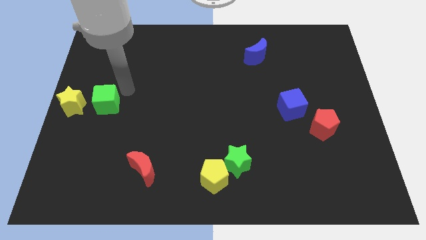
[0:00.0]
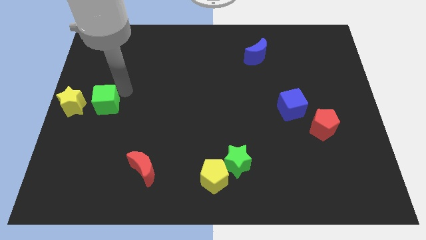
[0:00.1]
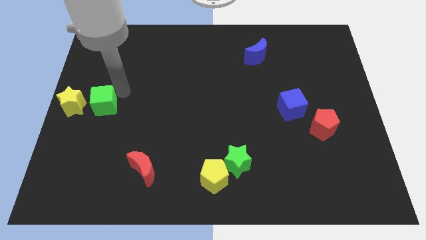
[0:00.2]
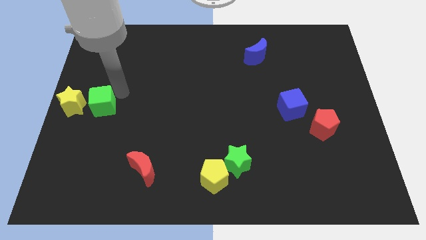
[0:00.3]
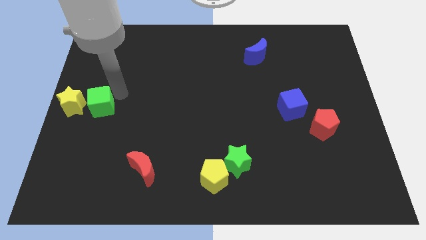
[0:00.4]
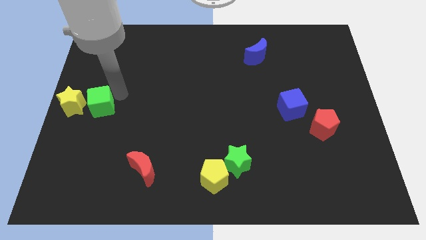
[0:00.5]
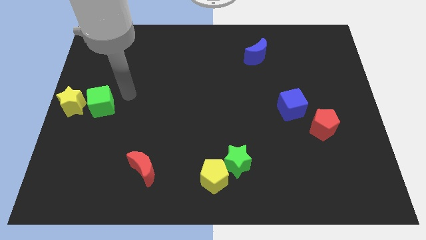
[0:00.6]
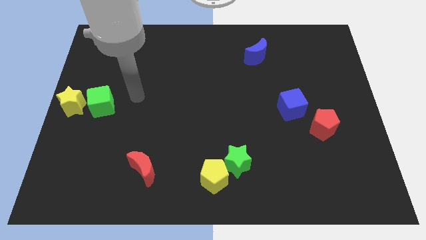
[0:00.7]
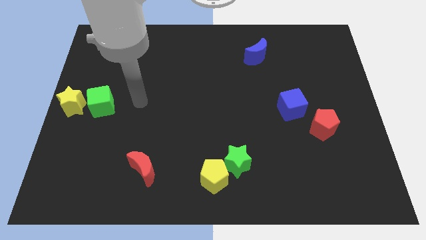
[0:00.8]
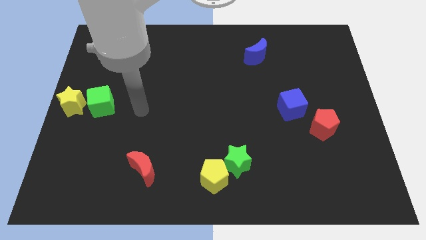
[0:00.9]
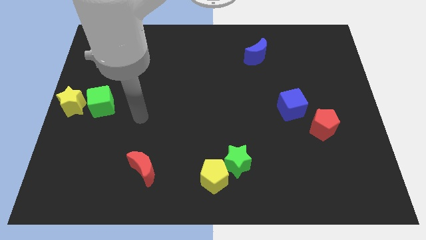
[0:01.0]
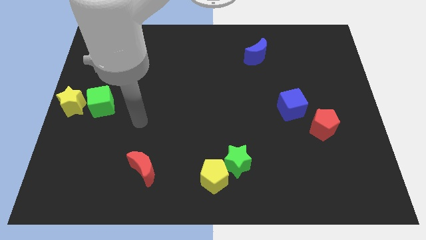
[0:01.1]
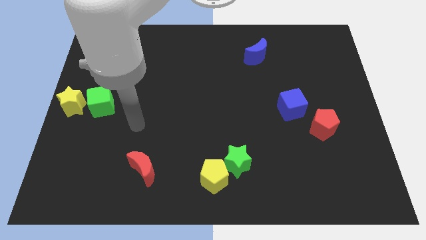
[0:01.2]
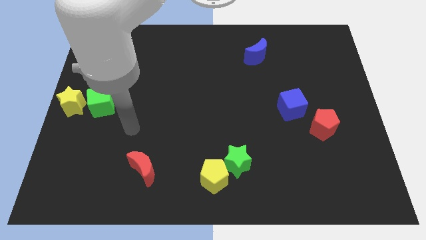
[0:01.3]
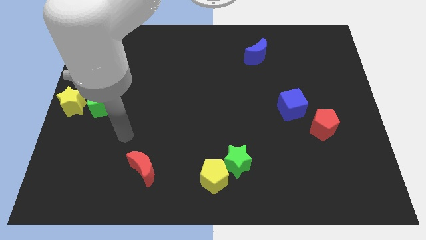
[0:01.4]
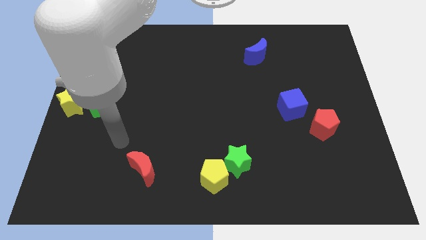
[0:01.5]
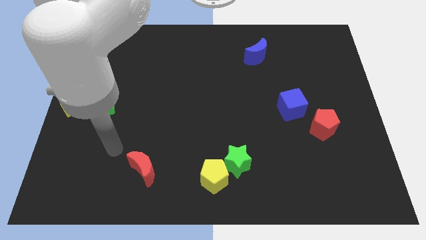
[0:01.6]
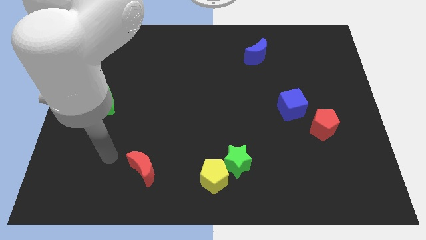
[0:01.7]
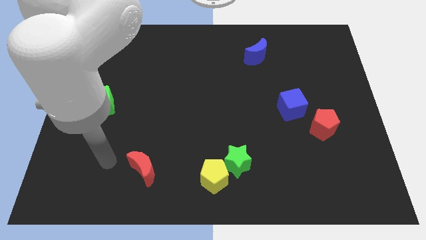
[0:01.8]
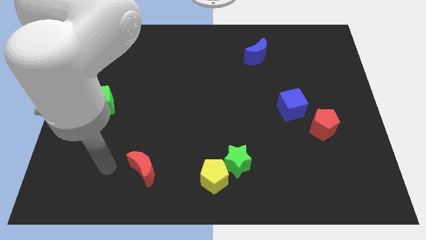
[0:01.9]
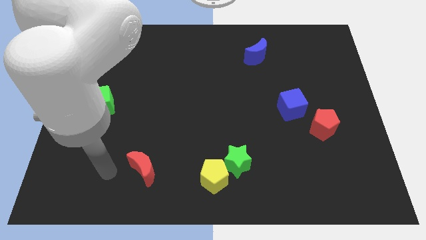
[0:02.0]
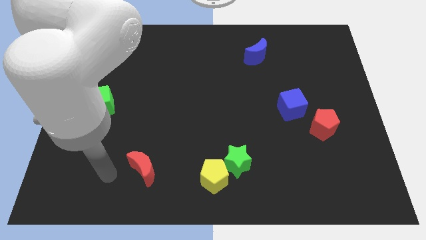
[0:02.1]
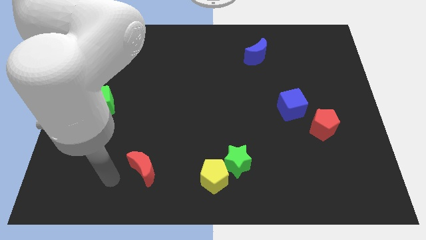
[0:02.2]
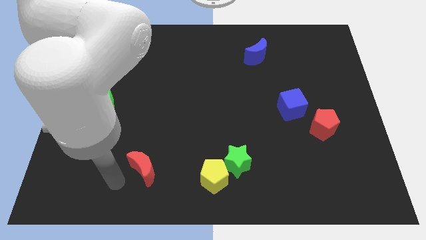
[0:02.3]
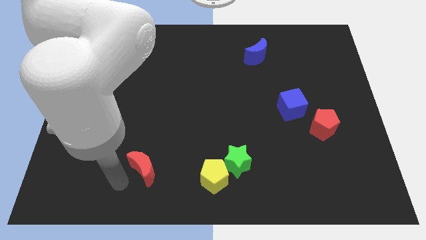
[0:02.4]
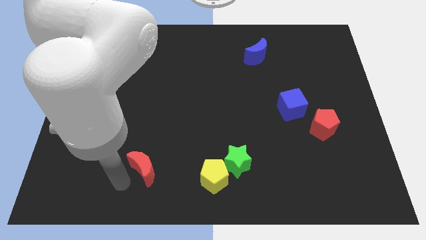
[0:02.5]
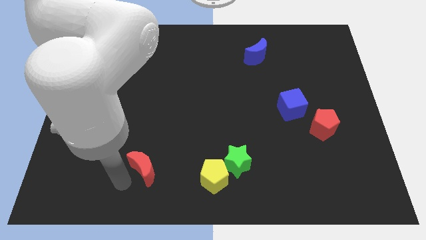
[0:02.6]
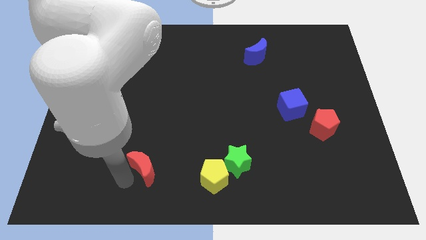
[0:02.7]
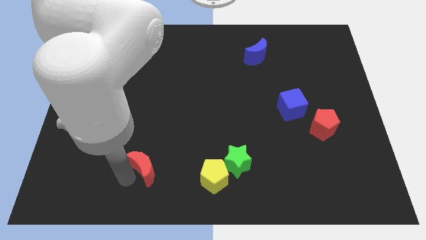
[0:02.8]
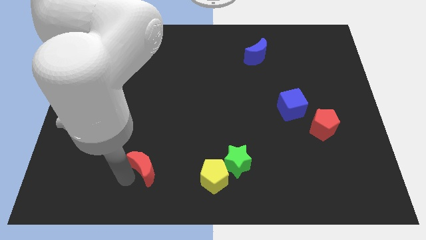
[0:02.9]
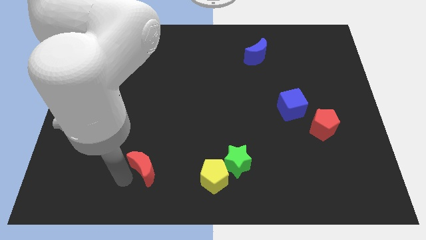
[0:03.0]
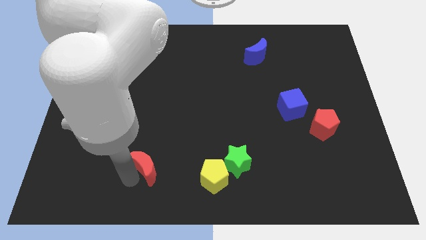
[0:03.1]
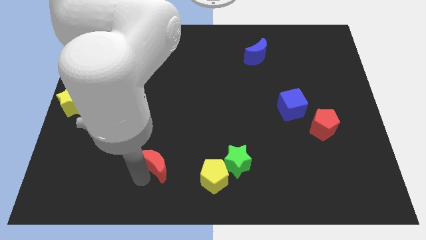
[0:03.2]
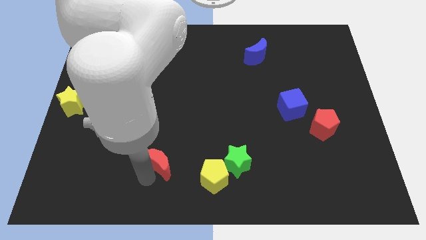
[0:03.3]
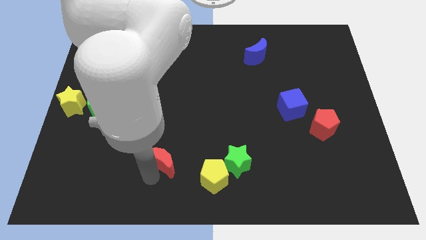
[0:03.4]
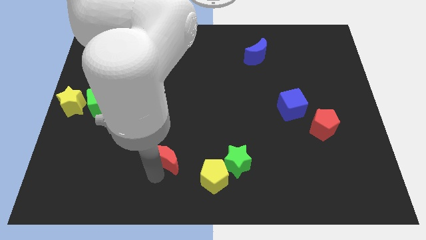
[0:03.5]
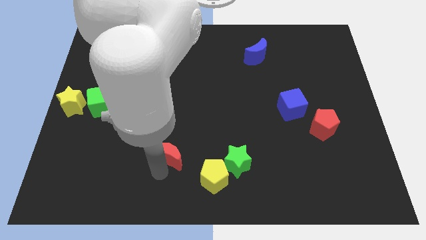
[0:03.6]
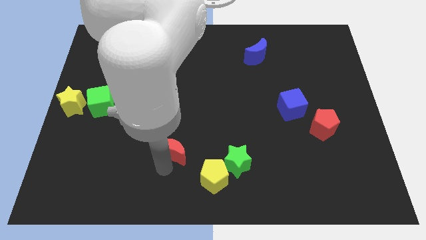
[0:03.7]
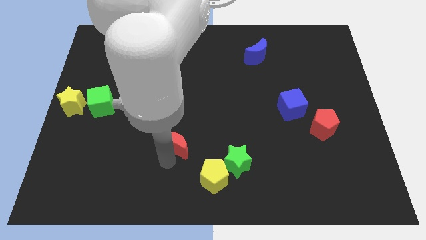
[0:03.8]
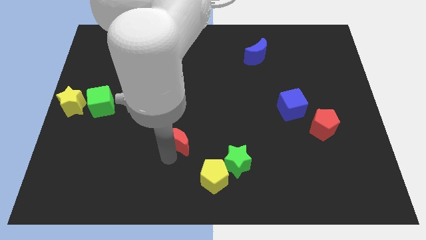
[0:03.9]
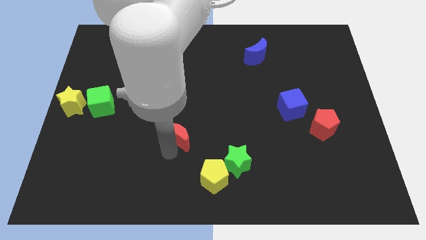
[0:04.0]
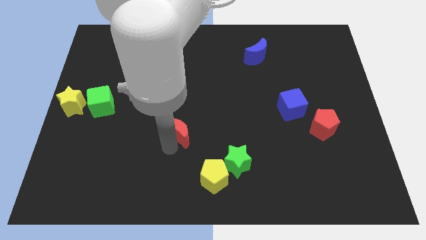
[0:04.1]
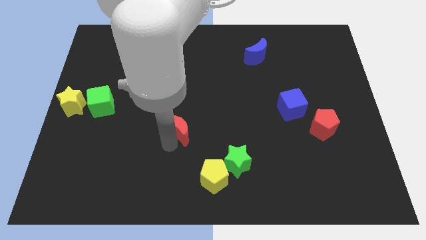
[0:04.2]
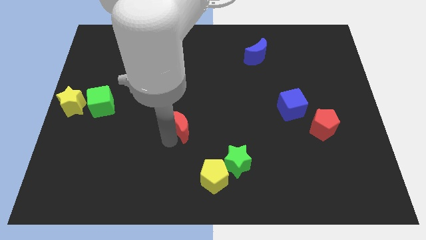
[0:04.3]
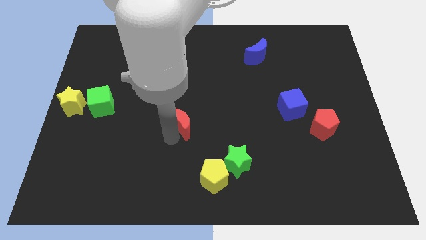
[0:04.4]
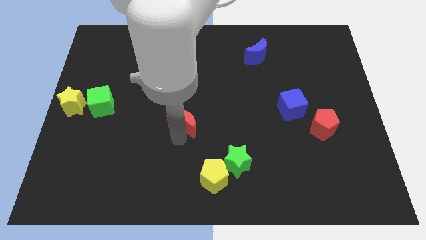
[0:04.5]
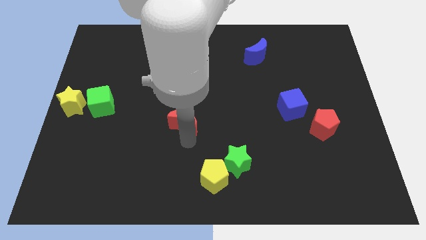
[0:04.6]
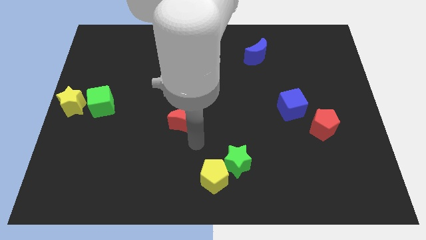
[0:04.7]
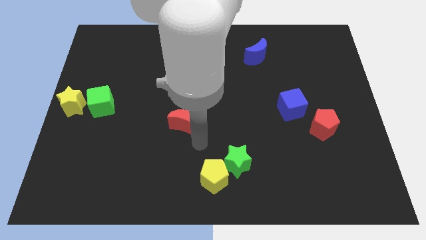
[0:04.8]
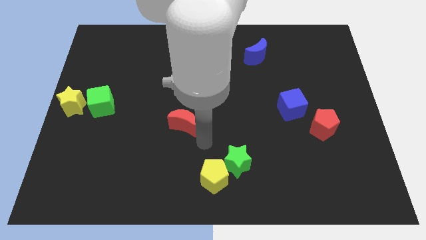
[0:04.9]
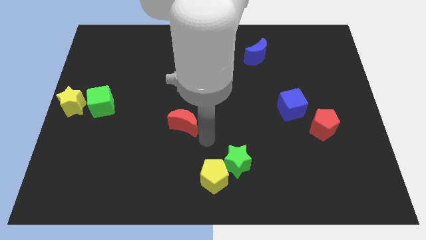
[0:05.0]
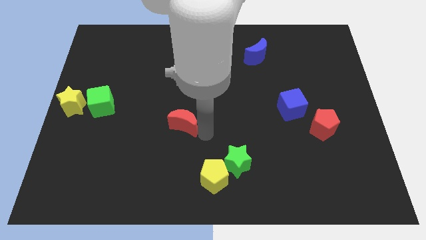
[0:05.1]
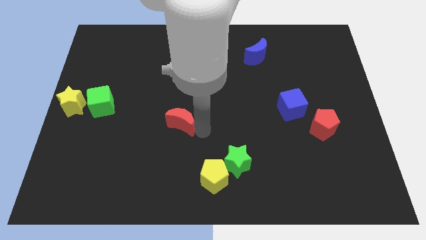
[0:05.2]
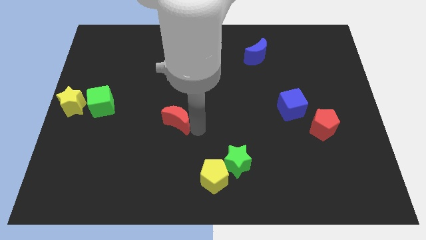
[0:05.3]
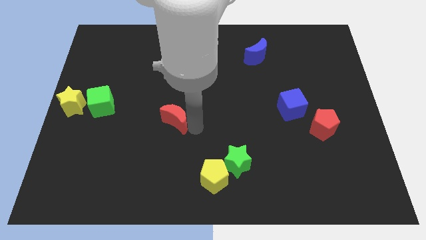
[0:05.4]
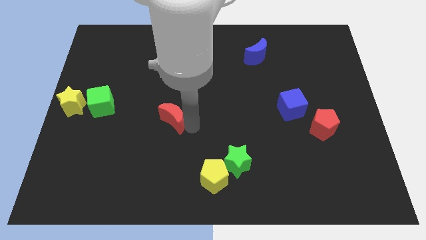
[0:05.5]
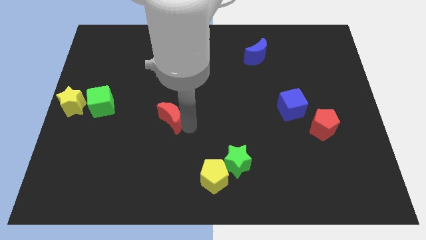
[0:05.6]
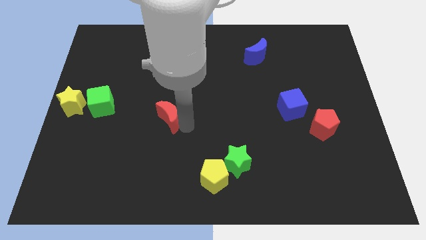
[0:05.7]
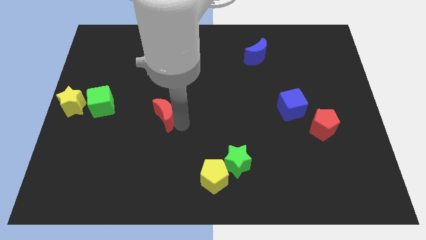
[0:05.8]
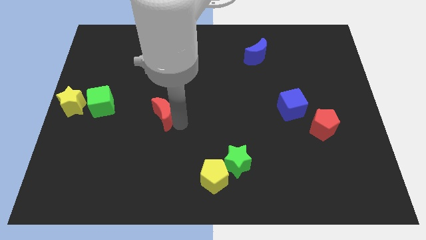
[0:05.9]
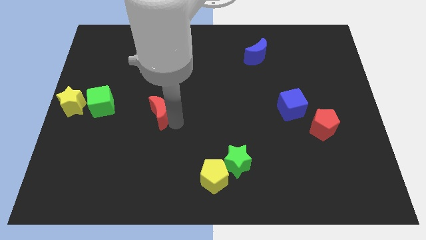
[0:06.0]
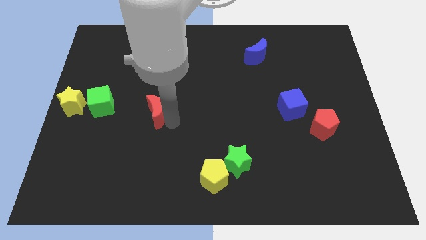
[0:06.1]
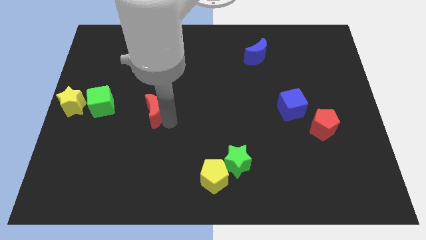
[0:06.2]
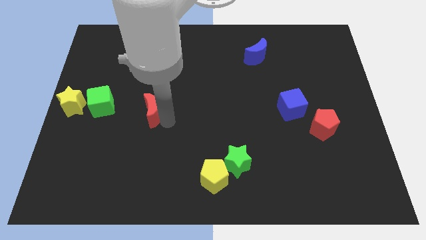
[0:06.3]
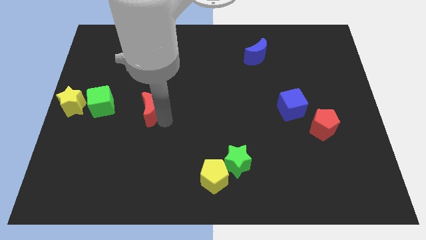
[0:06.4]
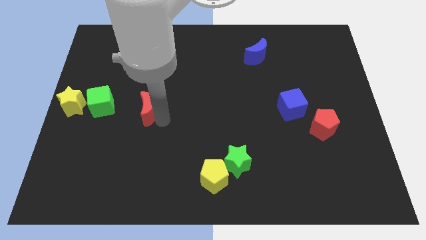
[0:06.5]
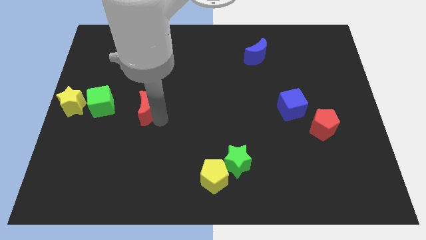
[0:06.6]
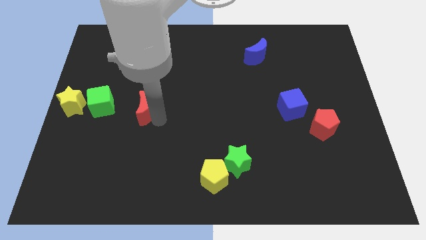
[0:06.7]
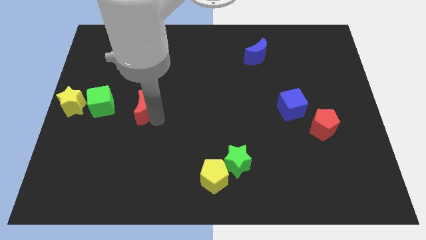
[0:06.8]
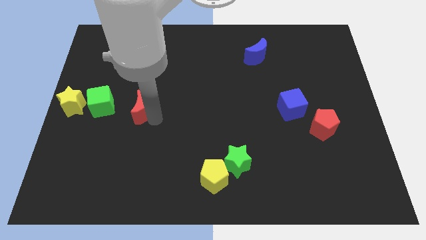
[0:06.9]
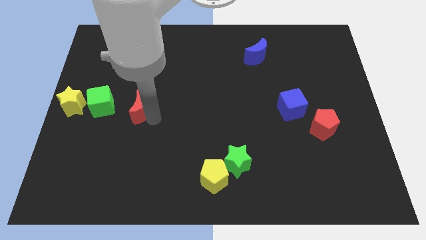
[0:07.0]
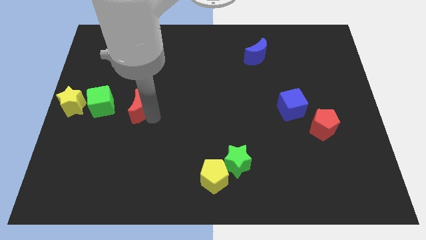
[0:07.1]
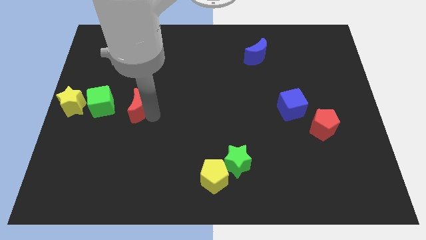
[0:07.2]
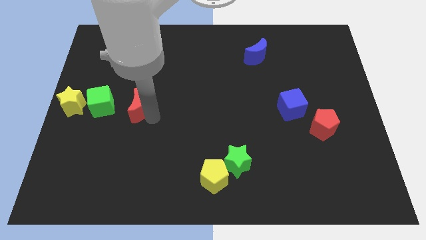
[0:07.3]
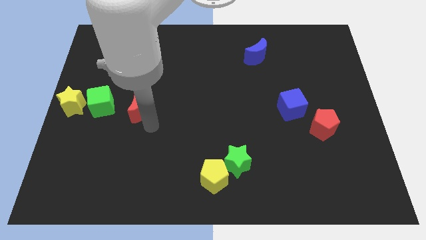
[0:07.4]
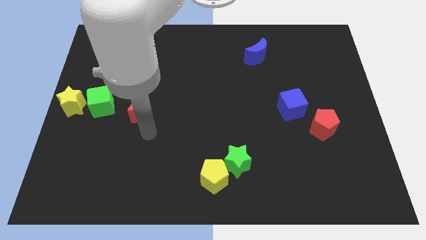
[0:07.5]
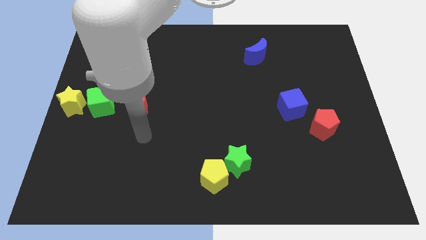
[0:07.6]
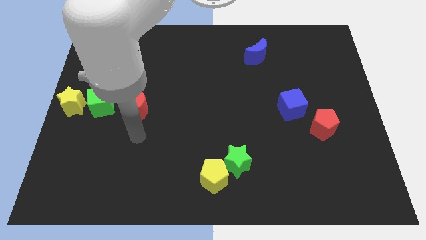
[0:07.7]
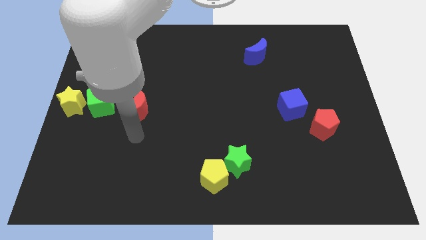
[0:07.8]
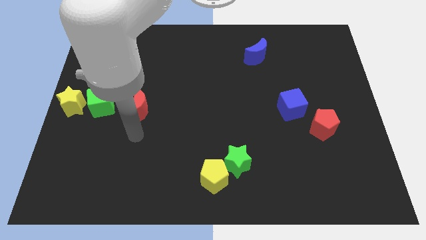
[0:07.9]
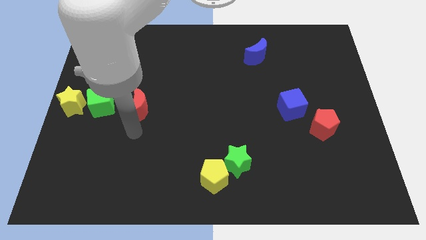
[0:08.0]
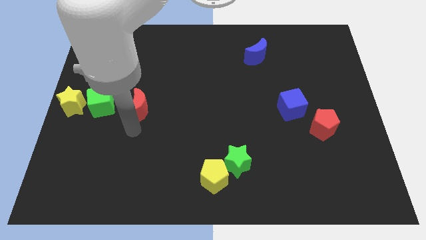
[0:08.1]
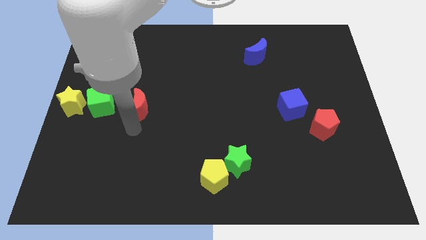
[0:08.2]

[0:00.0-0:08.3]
move the red crescent to the right side of the green cube

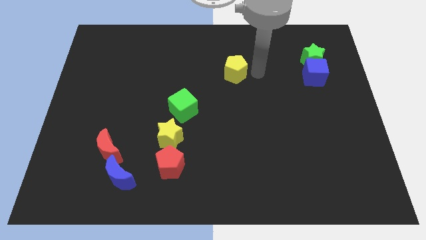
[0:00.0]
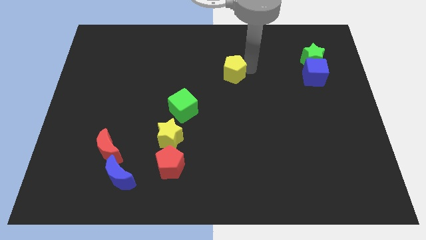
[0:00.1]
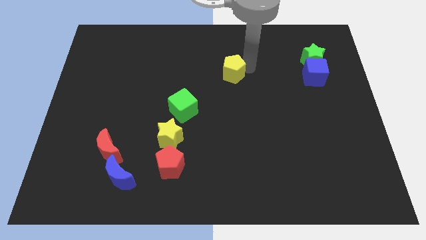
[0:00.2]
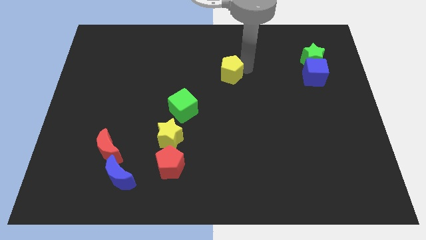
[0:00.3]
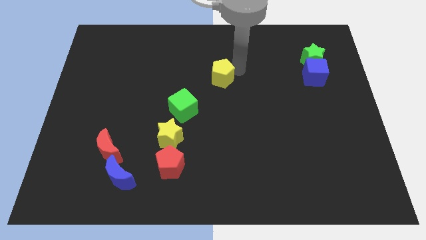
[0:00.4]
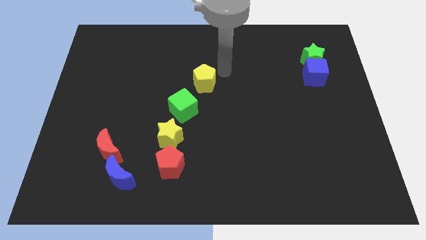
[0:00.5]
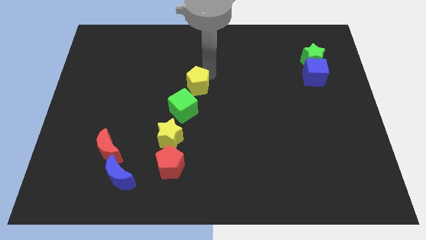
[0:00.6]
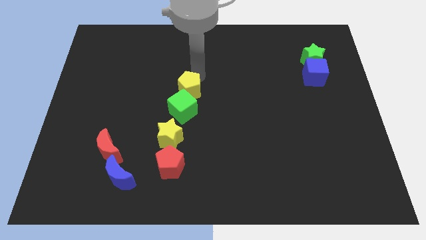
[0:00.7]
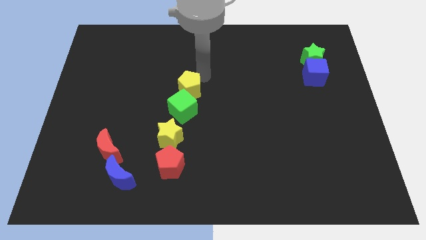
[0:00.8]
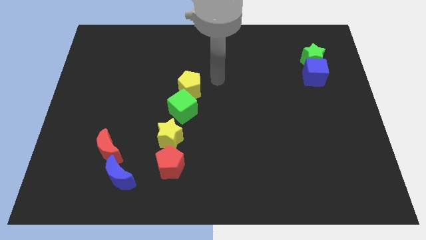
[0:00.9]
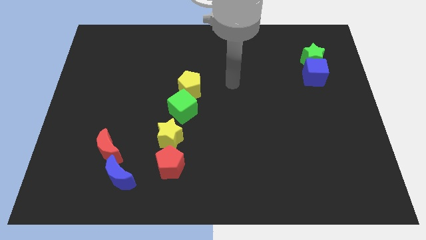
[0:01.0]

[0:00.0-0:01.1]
push the yellow pentagon into the green cube
